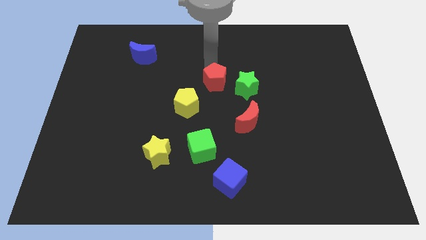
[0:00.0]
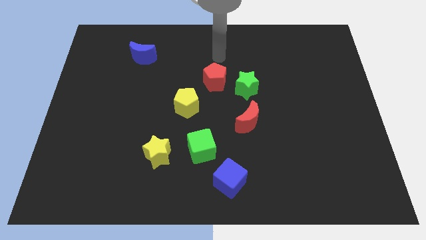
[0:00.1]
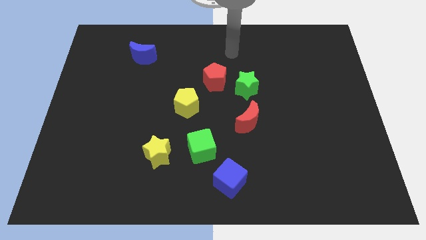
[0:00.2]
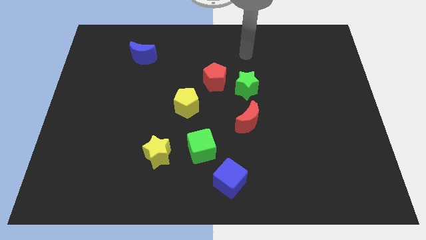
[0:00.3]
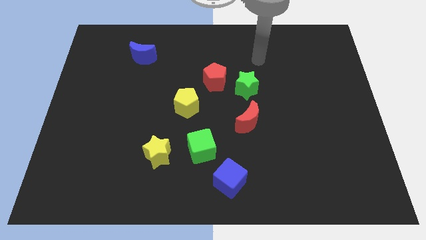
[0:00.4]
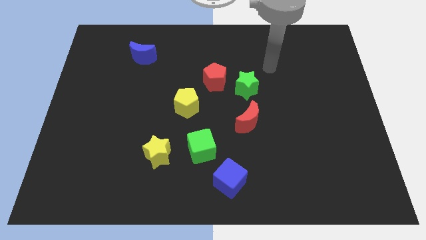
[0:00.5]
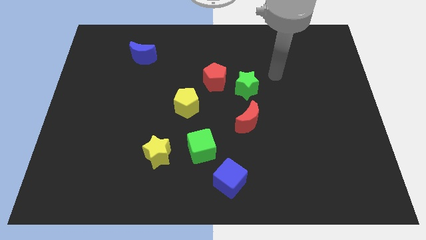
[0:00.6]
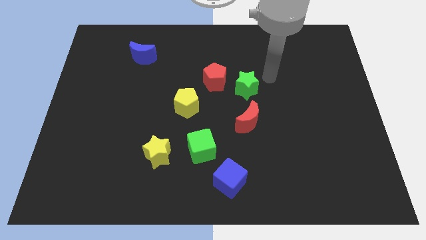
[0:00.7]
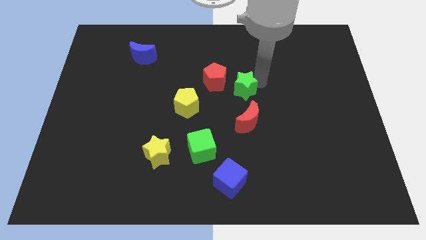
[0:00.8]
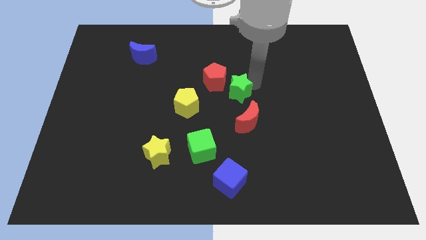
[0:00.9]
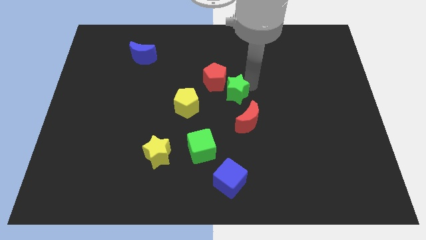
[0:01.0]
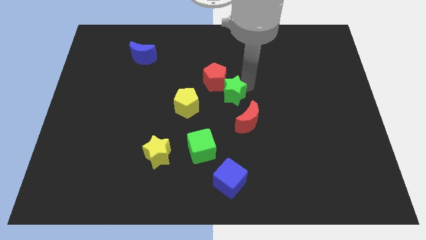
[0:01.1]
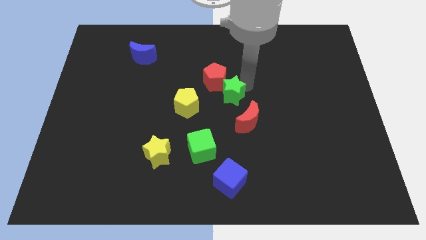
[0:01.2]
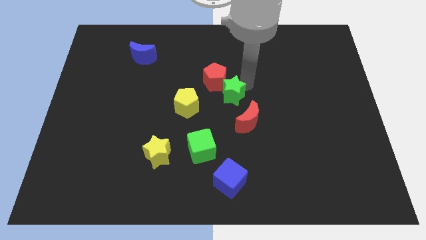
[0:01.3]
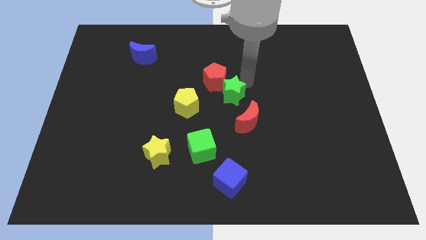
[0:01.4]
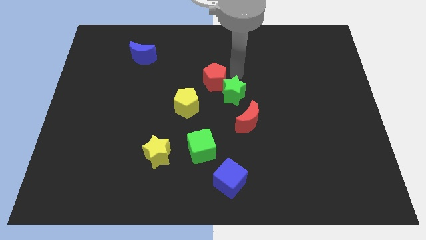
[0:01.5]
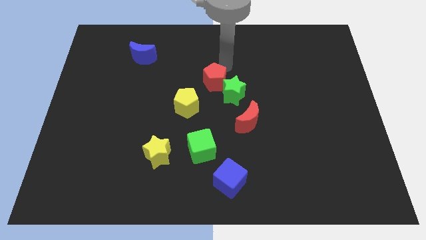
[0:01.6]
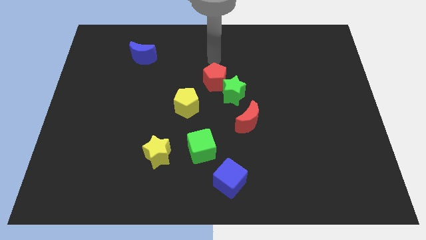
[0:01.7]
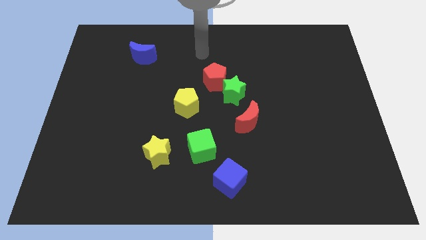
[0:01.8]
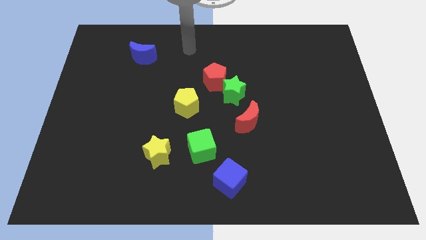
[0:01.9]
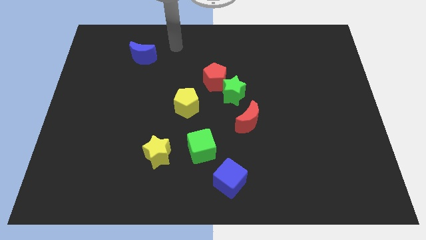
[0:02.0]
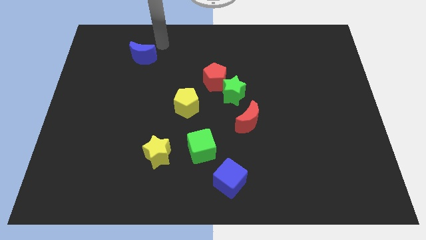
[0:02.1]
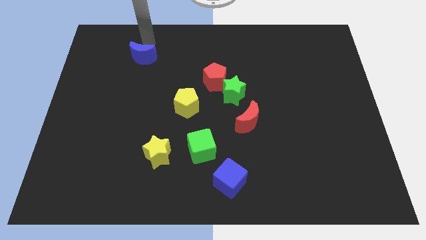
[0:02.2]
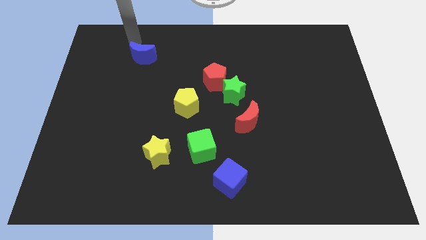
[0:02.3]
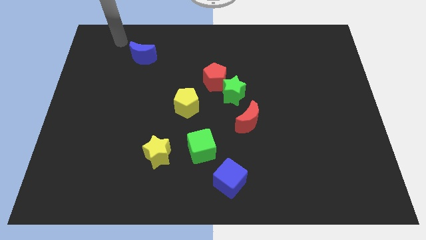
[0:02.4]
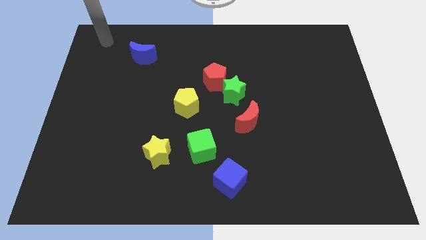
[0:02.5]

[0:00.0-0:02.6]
move the green star between the red pentagon red crescent

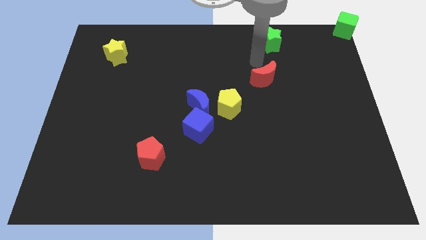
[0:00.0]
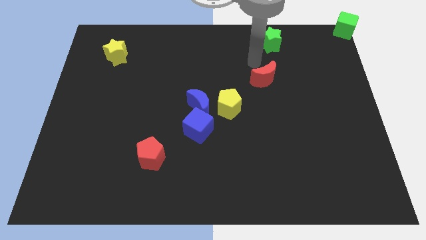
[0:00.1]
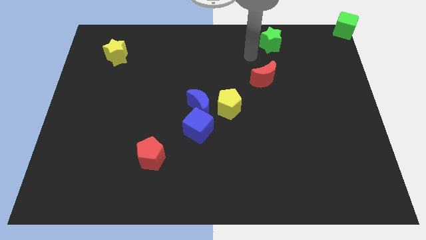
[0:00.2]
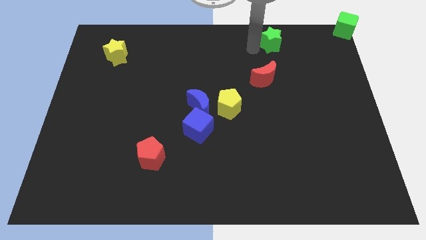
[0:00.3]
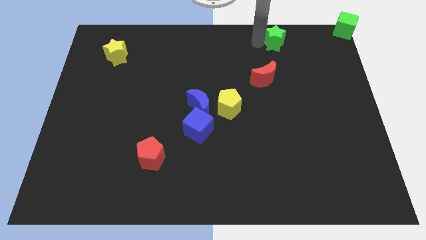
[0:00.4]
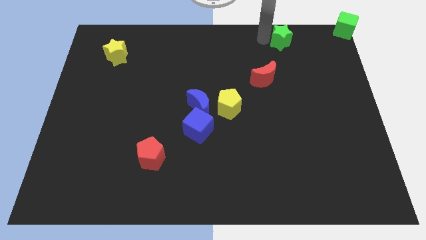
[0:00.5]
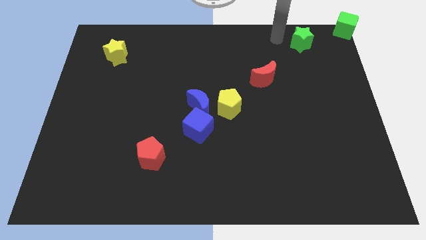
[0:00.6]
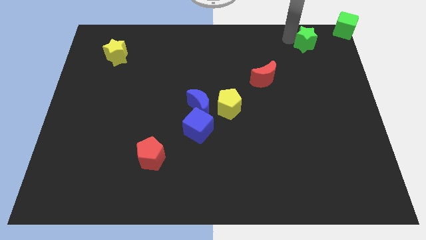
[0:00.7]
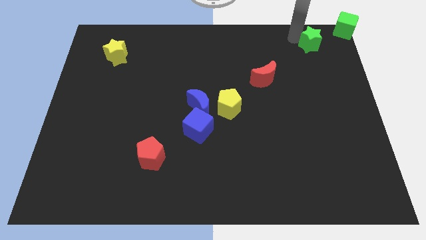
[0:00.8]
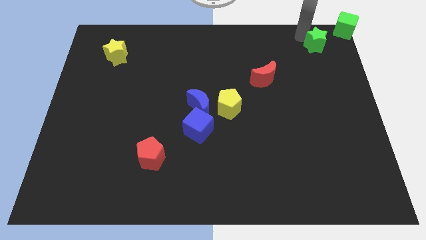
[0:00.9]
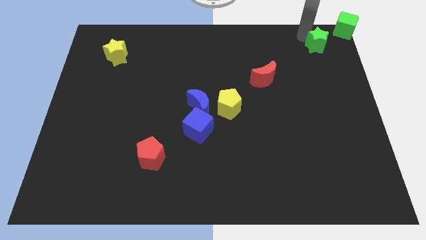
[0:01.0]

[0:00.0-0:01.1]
push the green star to the top right corner of the board

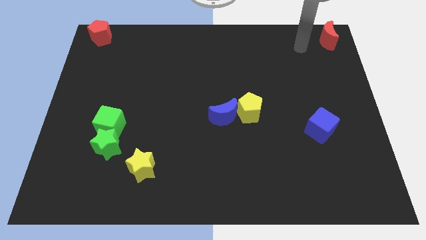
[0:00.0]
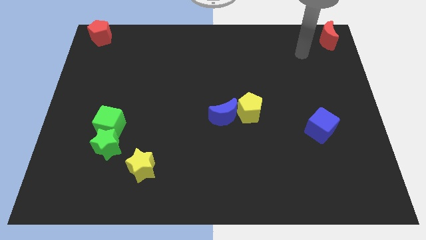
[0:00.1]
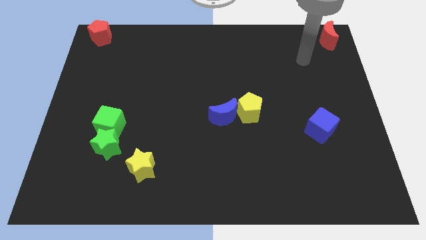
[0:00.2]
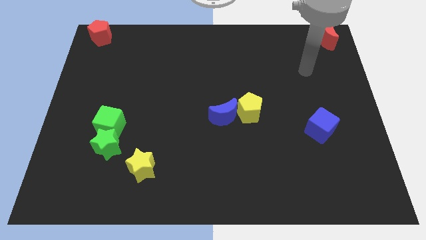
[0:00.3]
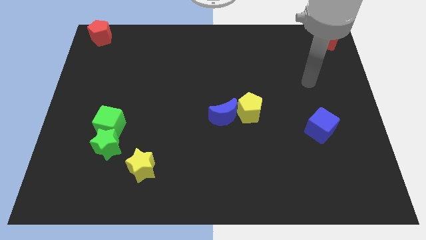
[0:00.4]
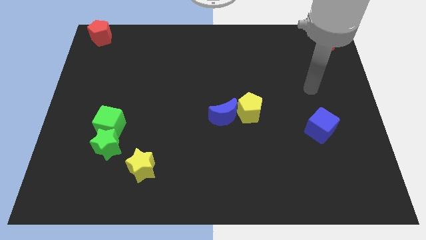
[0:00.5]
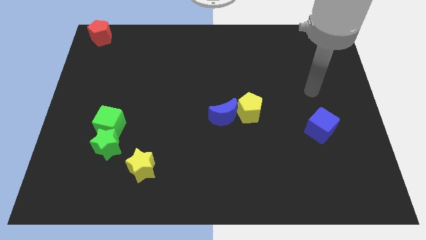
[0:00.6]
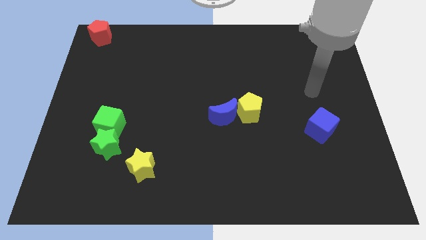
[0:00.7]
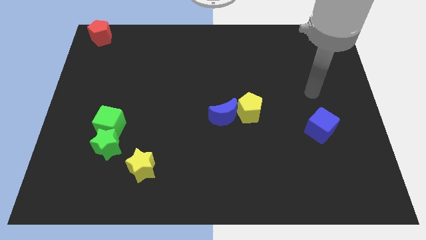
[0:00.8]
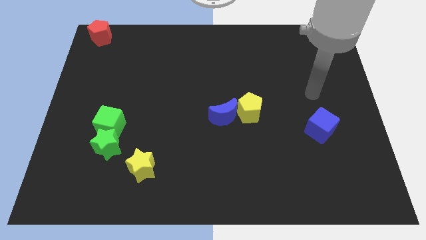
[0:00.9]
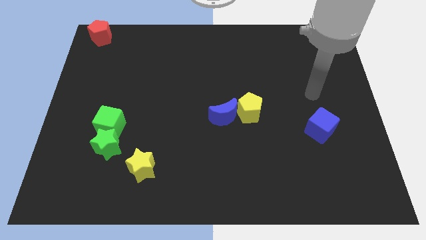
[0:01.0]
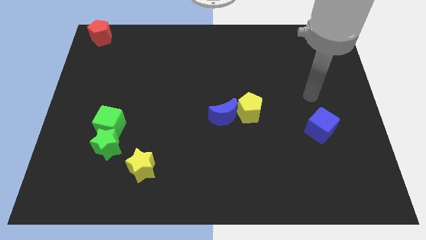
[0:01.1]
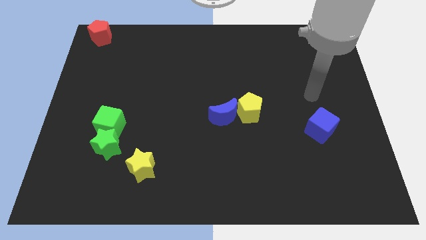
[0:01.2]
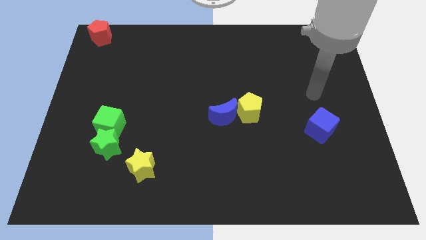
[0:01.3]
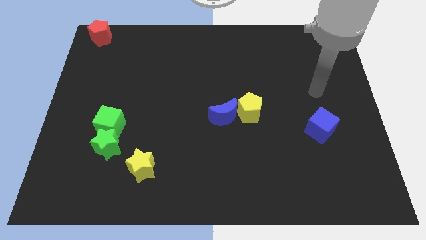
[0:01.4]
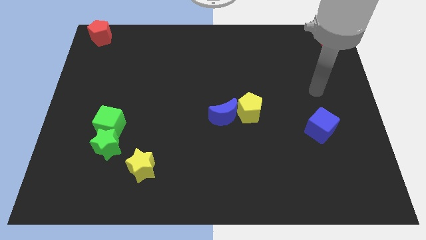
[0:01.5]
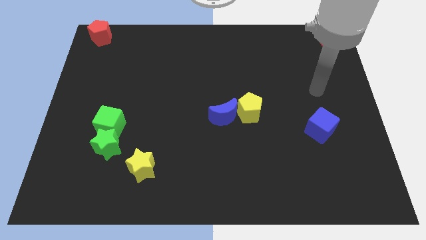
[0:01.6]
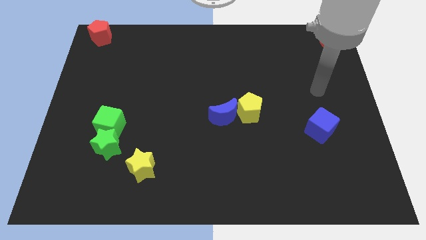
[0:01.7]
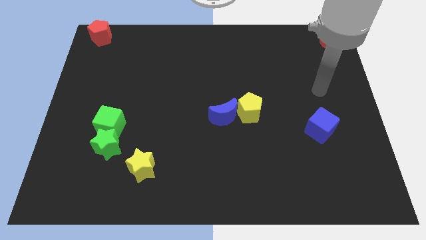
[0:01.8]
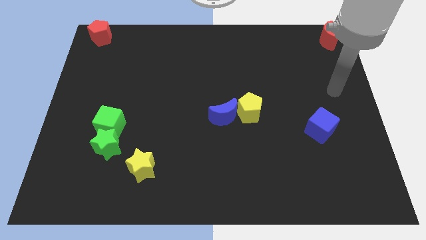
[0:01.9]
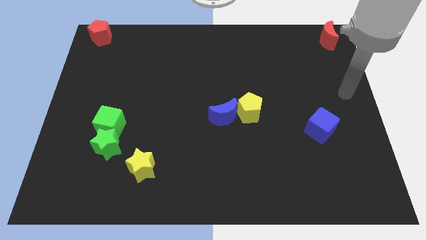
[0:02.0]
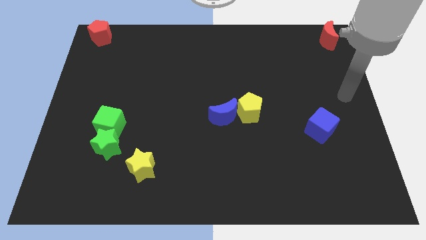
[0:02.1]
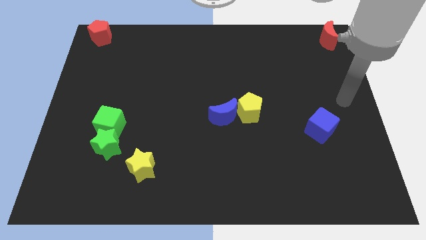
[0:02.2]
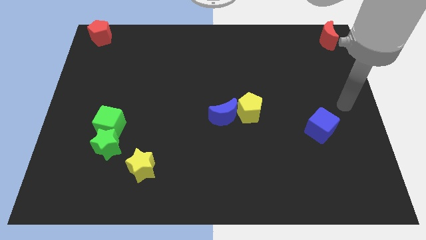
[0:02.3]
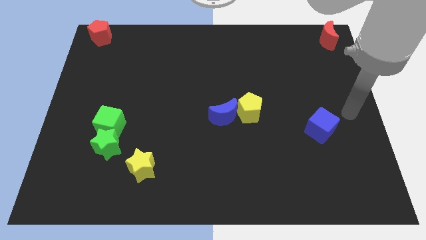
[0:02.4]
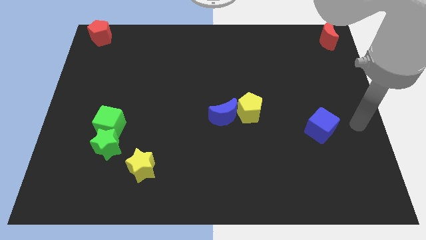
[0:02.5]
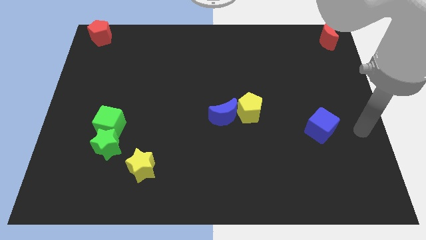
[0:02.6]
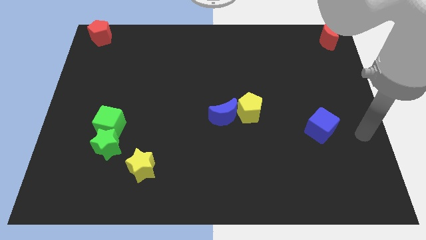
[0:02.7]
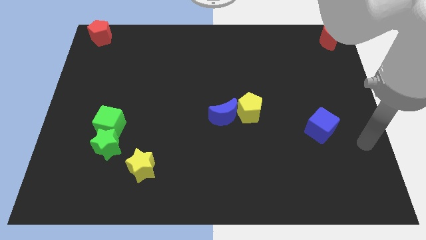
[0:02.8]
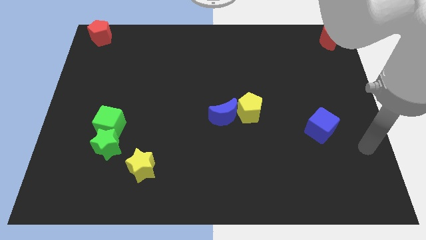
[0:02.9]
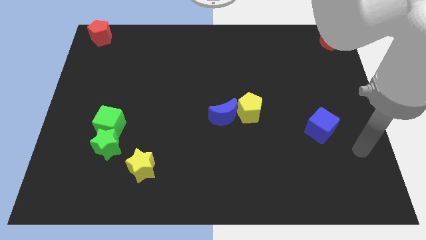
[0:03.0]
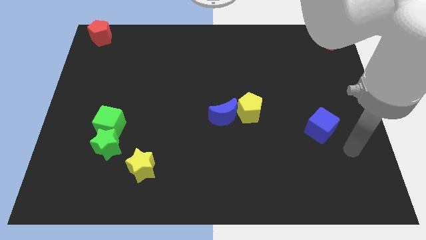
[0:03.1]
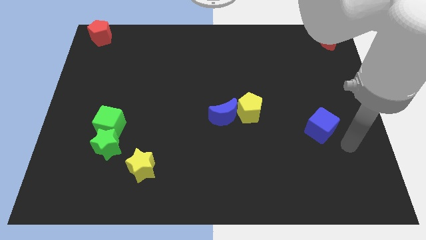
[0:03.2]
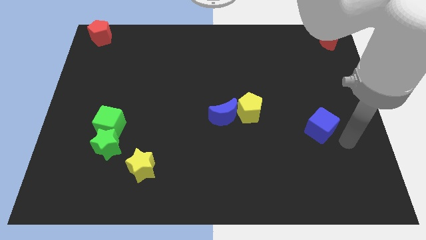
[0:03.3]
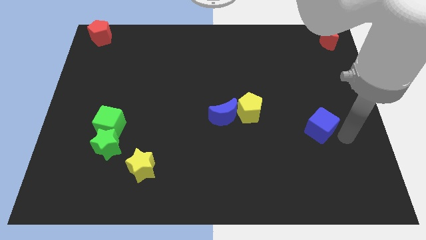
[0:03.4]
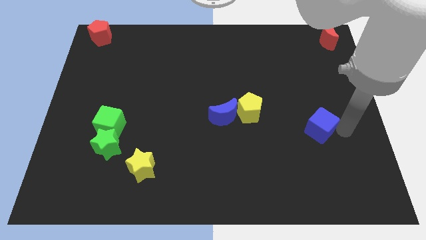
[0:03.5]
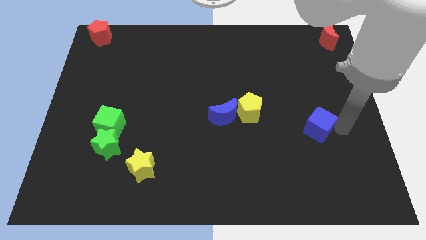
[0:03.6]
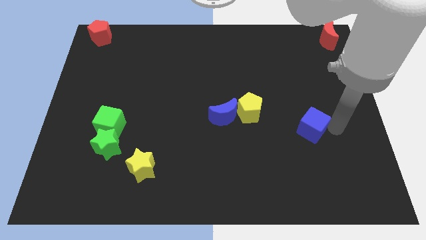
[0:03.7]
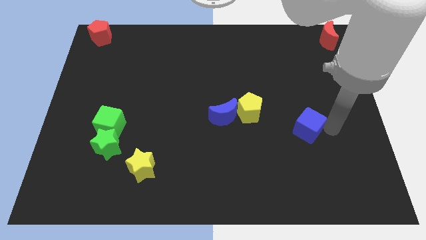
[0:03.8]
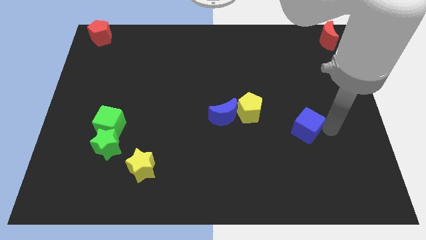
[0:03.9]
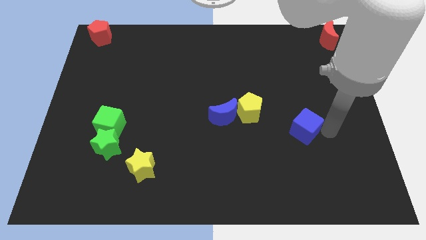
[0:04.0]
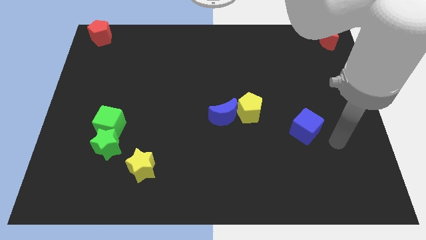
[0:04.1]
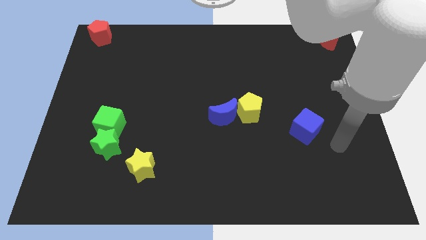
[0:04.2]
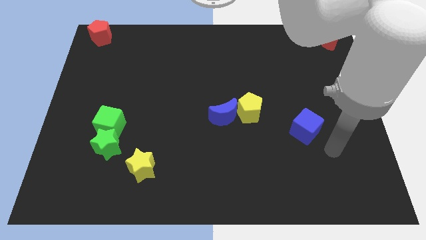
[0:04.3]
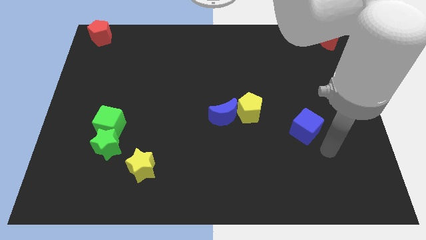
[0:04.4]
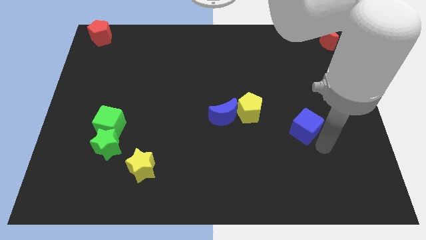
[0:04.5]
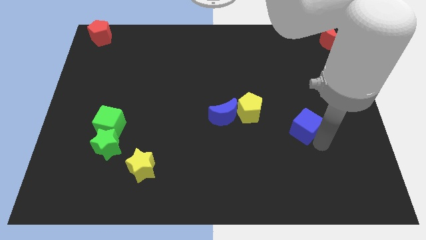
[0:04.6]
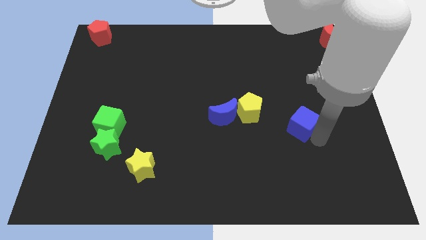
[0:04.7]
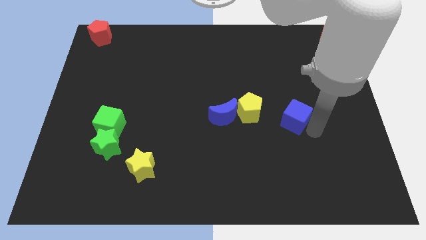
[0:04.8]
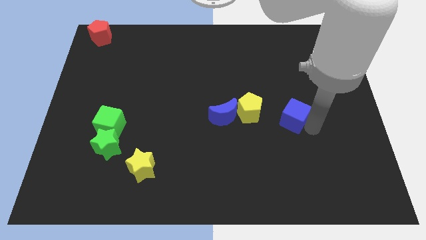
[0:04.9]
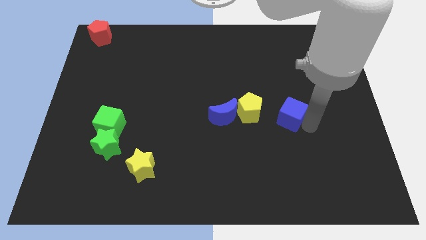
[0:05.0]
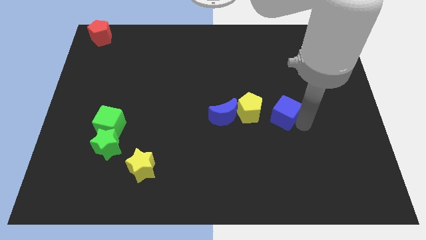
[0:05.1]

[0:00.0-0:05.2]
move the blue cube close to the yellow pentagon

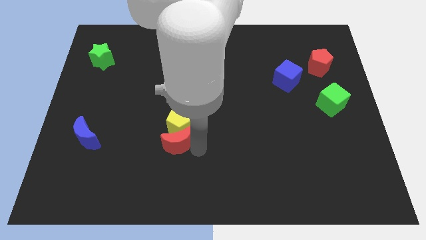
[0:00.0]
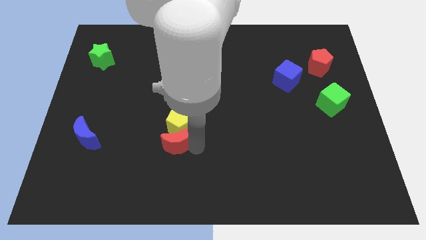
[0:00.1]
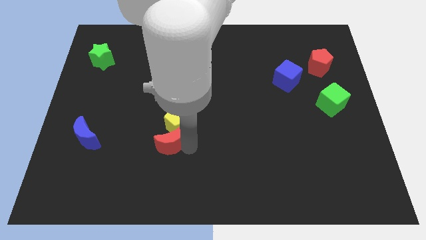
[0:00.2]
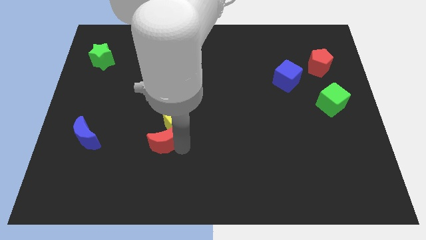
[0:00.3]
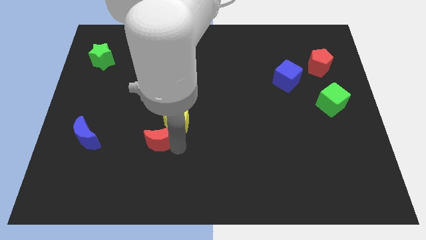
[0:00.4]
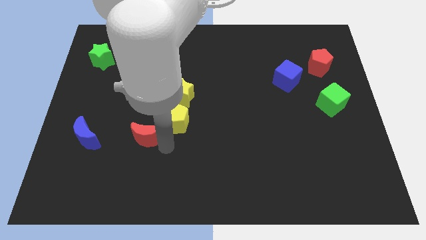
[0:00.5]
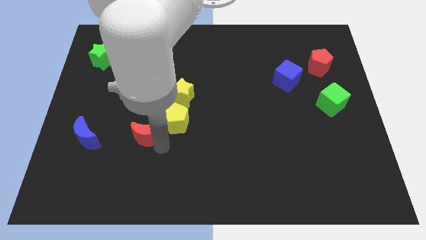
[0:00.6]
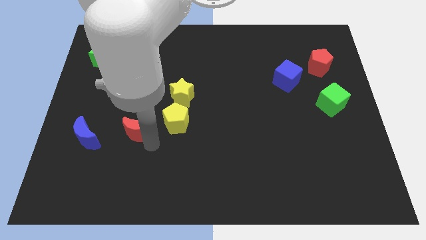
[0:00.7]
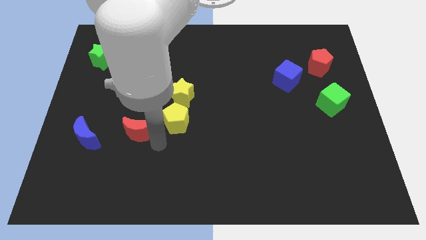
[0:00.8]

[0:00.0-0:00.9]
put the red moon in between the blue moon and yellow pentagon
